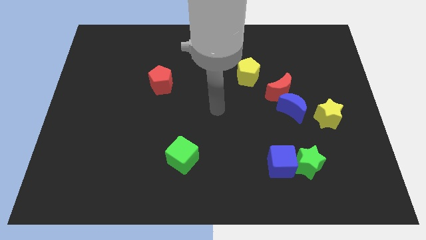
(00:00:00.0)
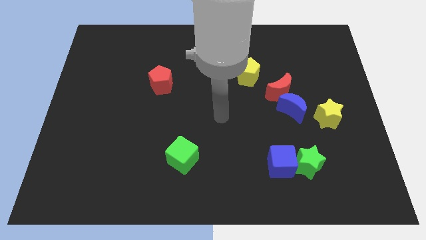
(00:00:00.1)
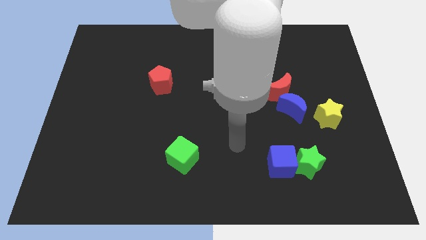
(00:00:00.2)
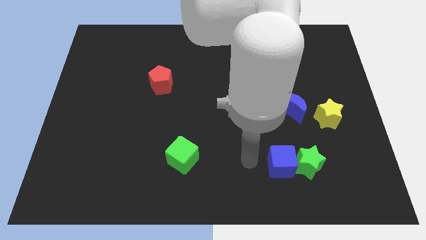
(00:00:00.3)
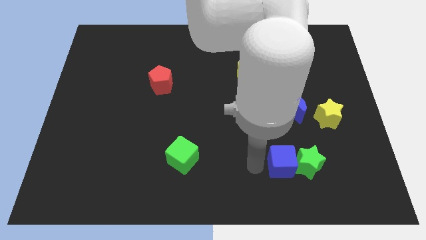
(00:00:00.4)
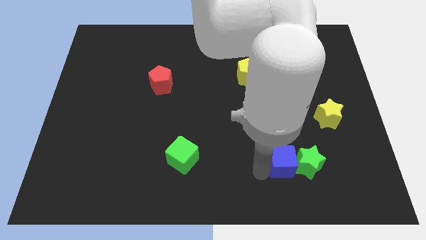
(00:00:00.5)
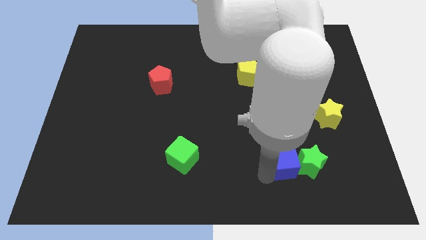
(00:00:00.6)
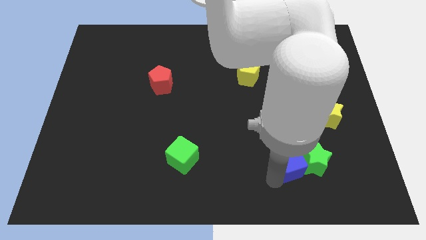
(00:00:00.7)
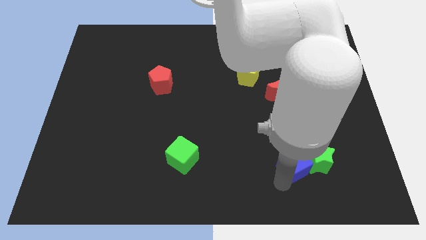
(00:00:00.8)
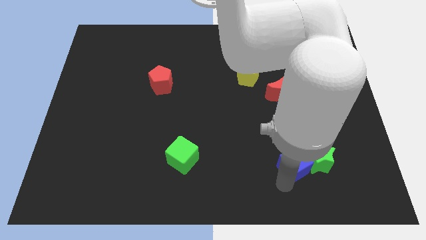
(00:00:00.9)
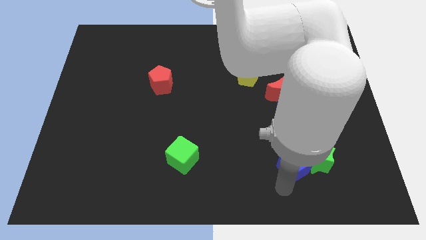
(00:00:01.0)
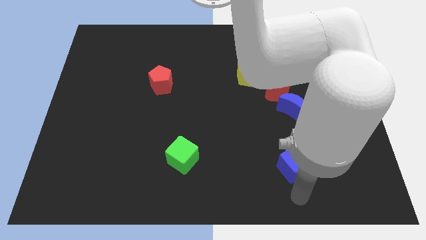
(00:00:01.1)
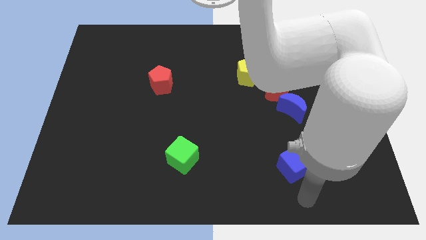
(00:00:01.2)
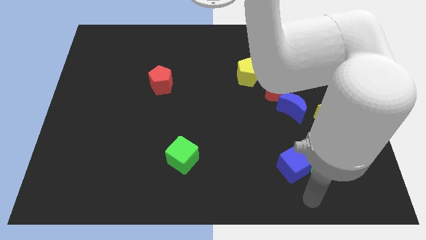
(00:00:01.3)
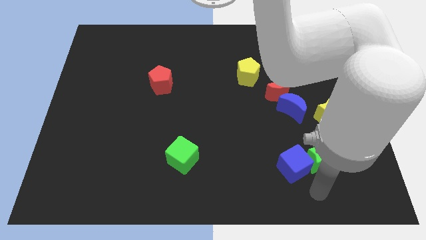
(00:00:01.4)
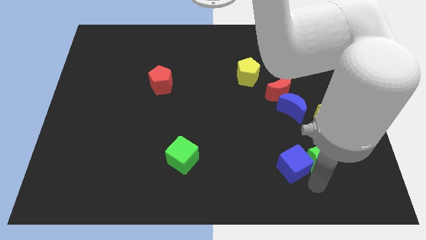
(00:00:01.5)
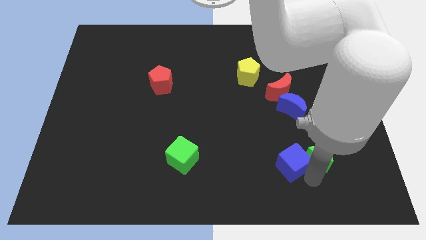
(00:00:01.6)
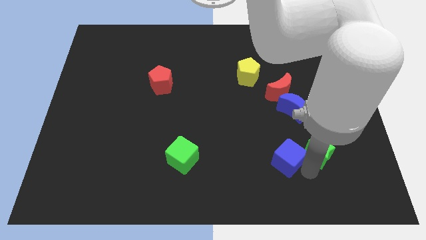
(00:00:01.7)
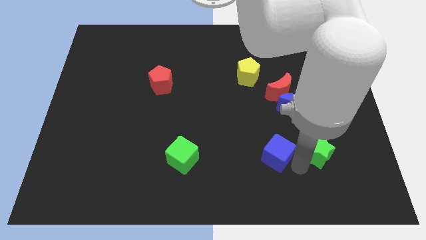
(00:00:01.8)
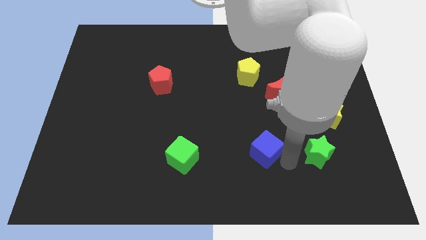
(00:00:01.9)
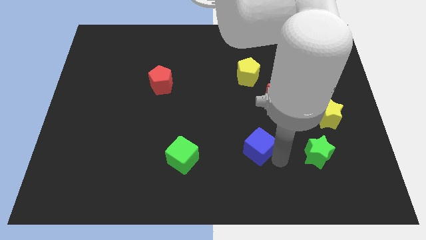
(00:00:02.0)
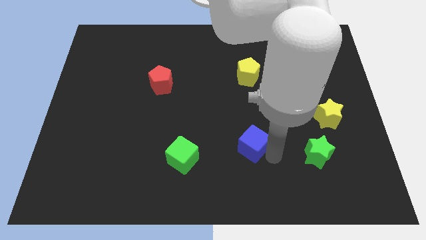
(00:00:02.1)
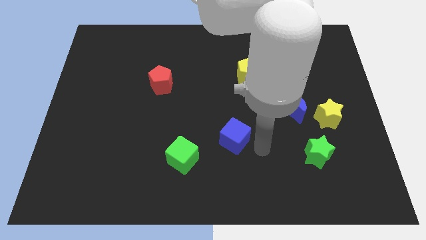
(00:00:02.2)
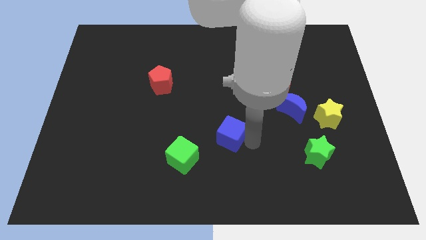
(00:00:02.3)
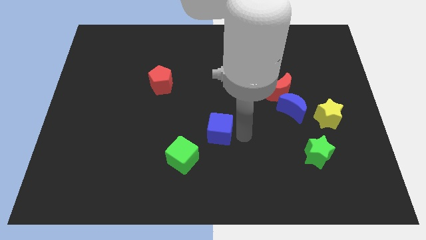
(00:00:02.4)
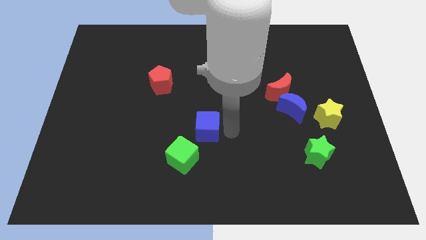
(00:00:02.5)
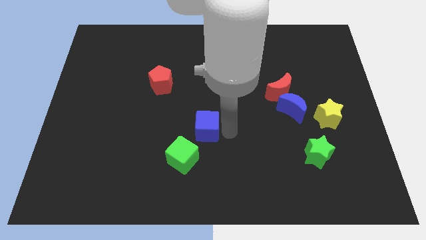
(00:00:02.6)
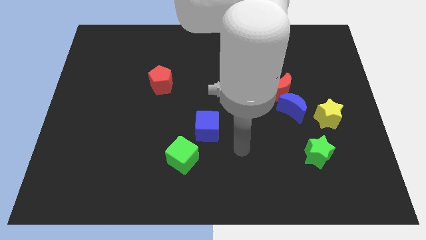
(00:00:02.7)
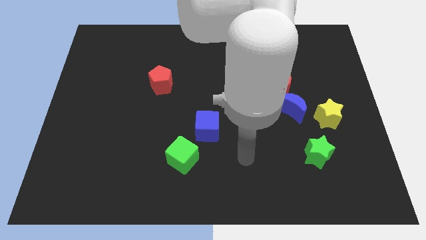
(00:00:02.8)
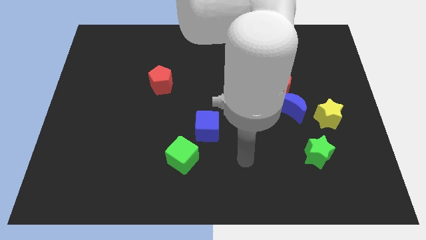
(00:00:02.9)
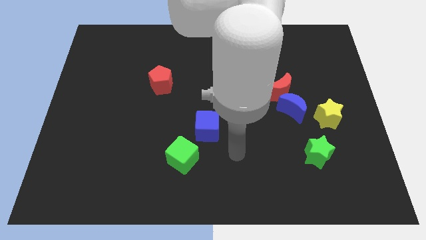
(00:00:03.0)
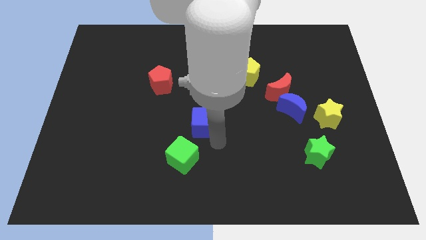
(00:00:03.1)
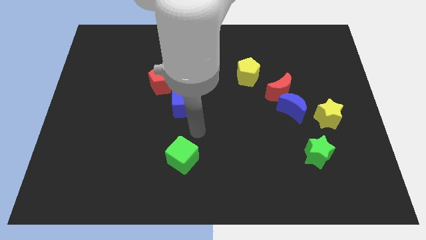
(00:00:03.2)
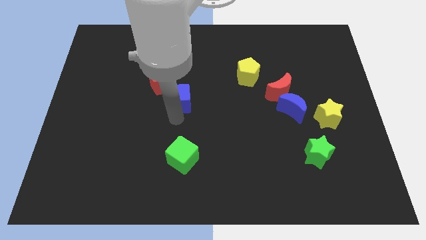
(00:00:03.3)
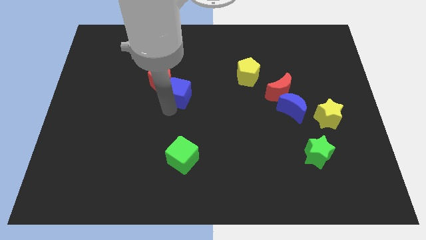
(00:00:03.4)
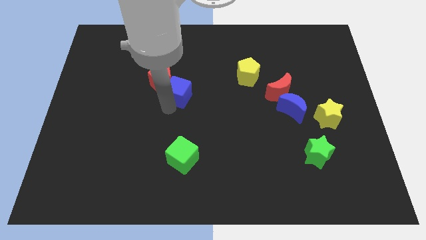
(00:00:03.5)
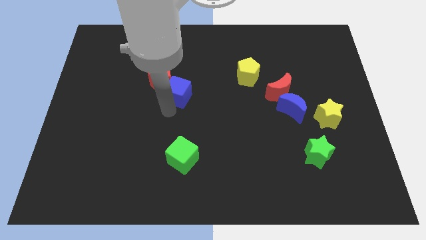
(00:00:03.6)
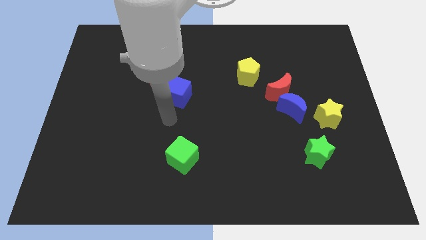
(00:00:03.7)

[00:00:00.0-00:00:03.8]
slide the blue cube next to the red pentagon

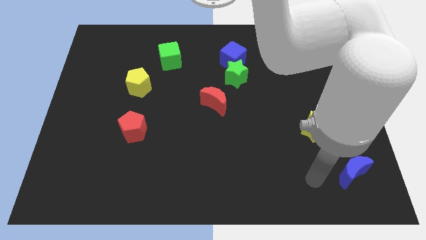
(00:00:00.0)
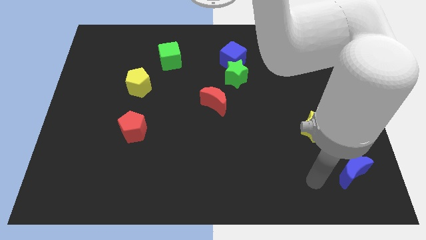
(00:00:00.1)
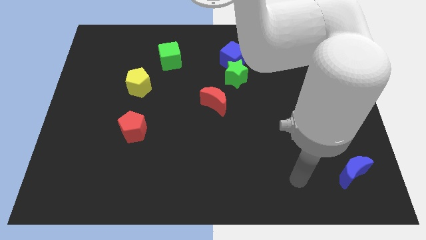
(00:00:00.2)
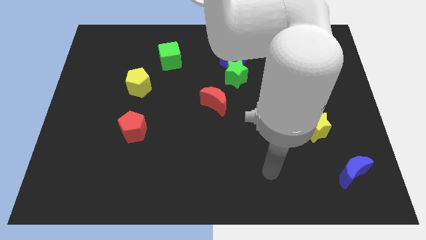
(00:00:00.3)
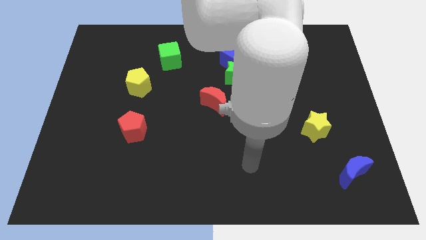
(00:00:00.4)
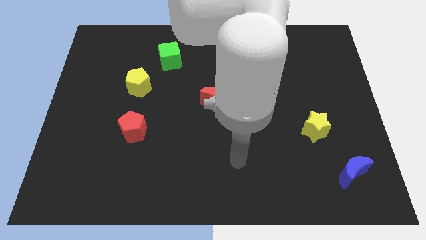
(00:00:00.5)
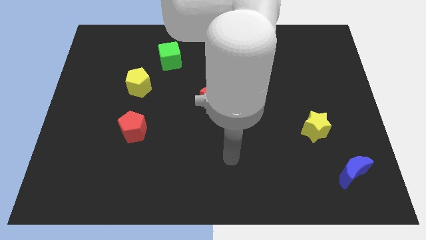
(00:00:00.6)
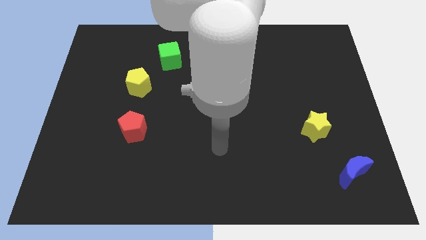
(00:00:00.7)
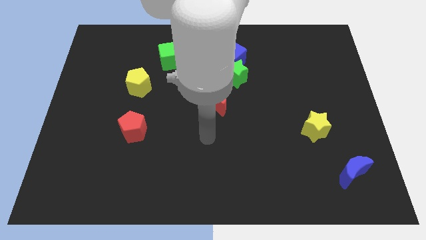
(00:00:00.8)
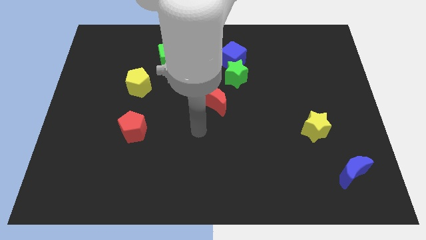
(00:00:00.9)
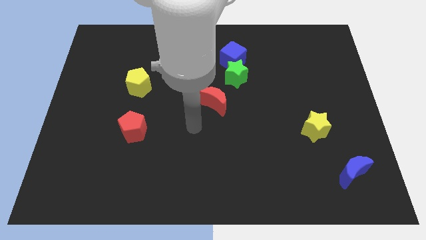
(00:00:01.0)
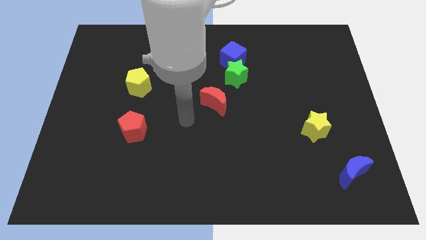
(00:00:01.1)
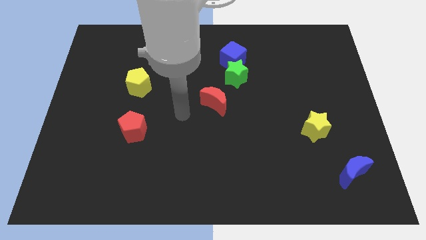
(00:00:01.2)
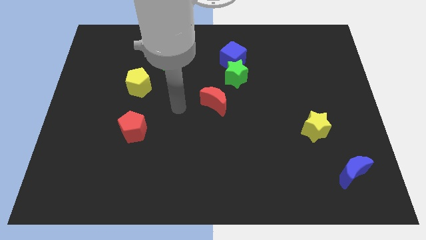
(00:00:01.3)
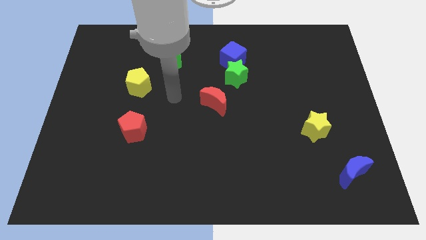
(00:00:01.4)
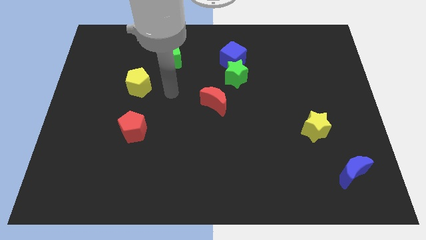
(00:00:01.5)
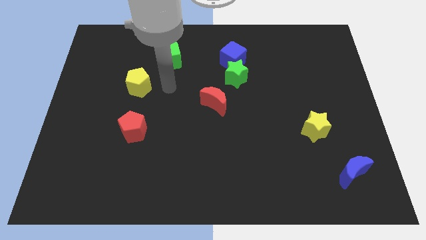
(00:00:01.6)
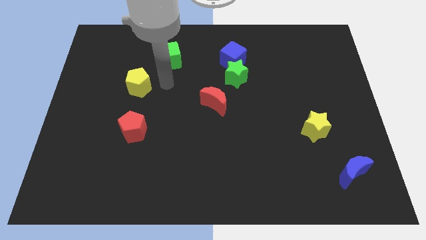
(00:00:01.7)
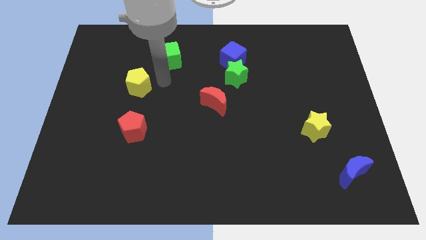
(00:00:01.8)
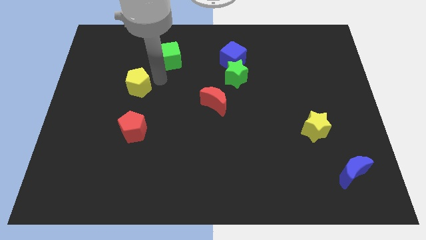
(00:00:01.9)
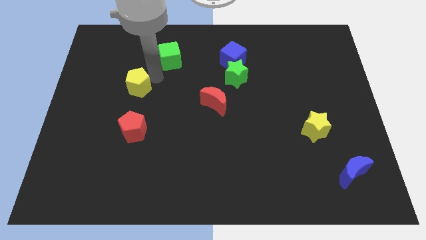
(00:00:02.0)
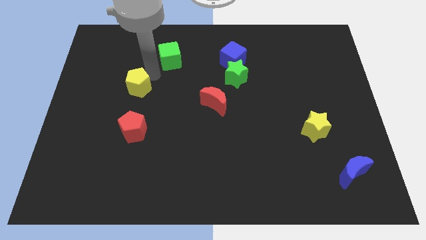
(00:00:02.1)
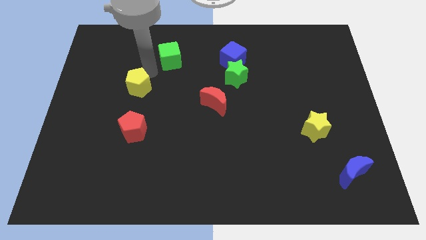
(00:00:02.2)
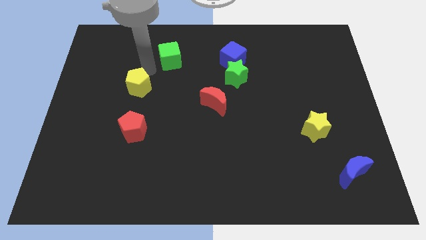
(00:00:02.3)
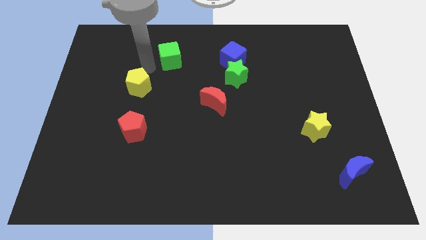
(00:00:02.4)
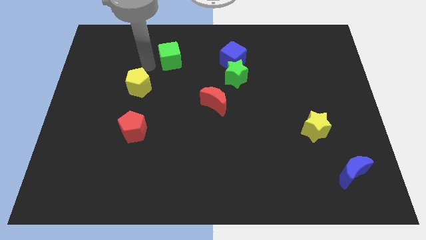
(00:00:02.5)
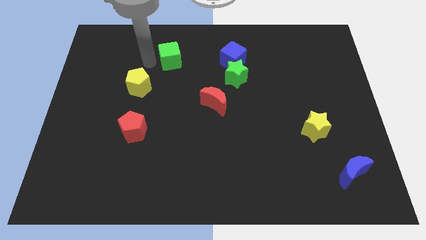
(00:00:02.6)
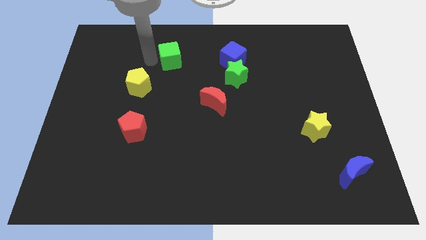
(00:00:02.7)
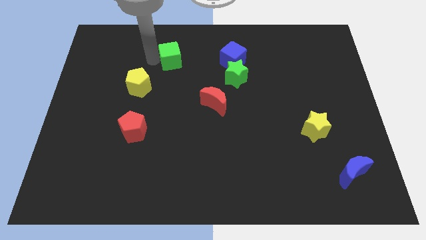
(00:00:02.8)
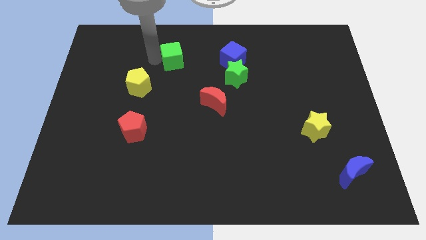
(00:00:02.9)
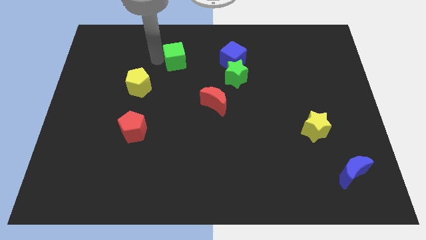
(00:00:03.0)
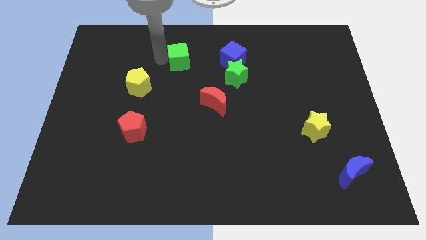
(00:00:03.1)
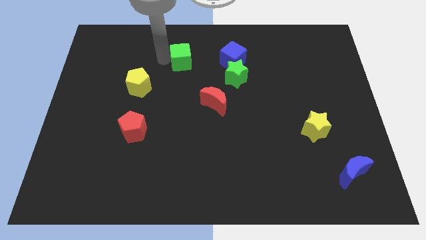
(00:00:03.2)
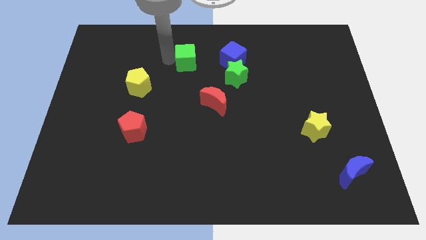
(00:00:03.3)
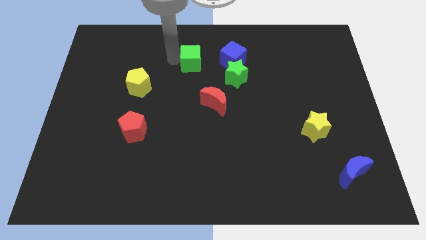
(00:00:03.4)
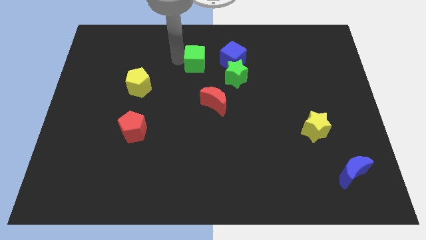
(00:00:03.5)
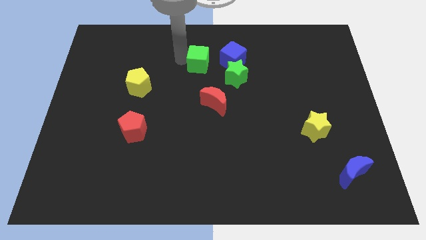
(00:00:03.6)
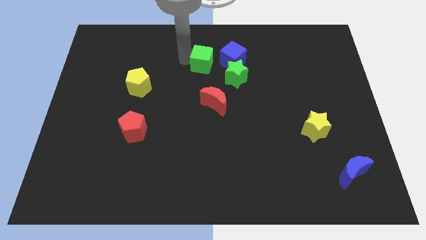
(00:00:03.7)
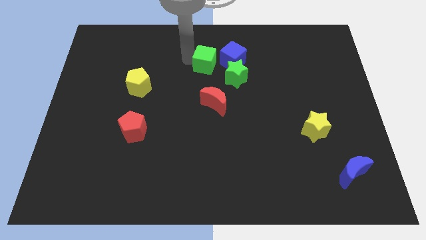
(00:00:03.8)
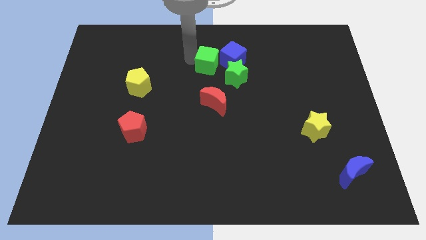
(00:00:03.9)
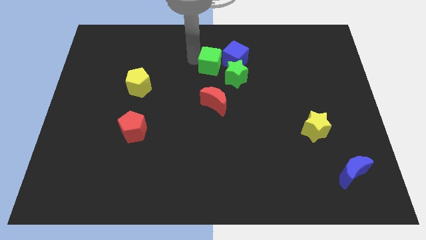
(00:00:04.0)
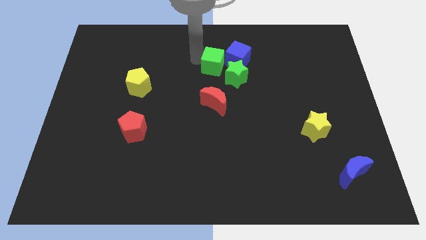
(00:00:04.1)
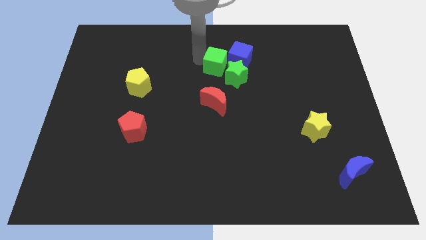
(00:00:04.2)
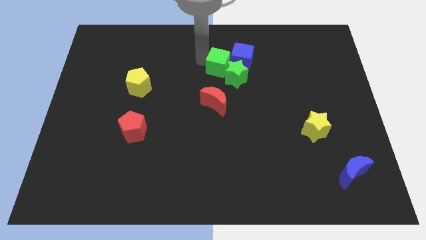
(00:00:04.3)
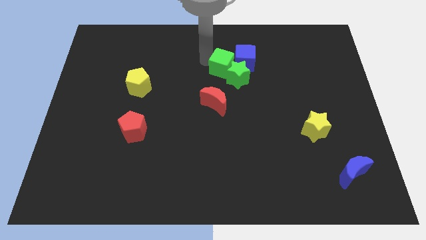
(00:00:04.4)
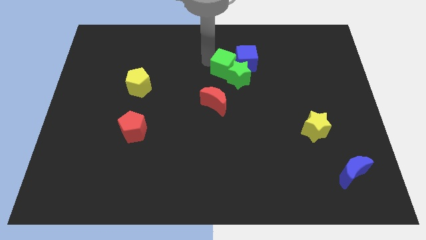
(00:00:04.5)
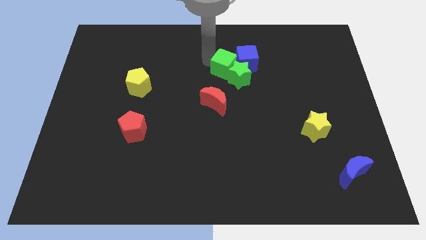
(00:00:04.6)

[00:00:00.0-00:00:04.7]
slide the green cube towards the blue cube

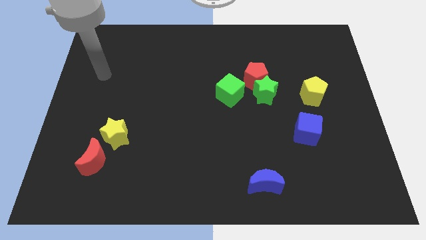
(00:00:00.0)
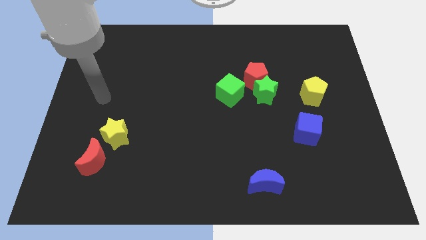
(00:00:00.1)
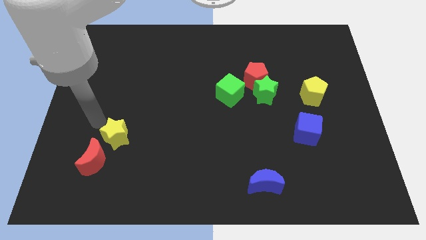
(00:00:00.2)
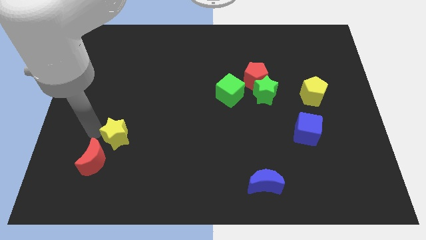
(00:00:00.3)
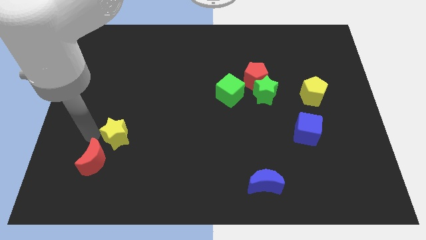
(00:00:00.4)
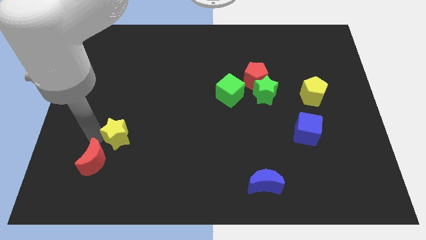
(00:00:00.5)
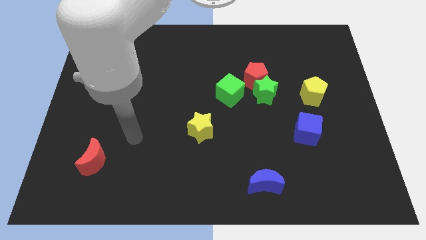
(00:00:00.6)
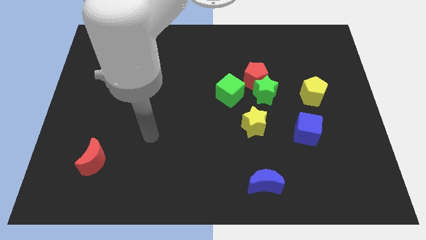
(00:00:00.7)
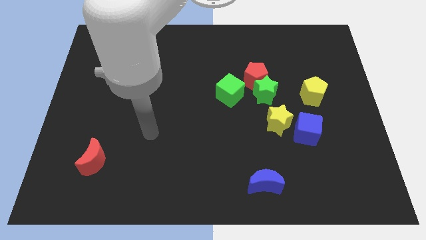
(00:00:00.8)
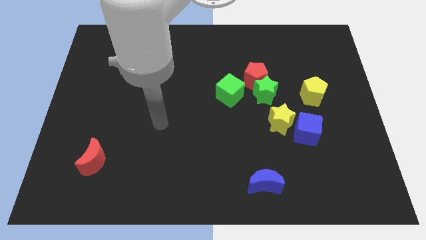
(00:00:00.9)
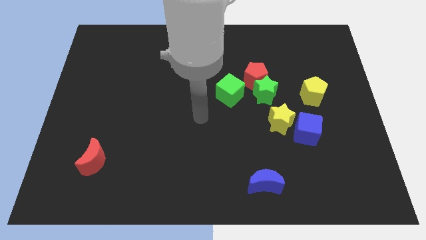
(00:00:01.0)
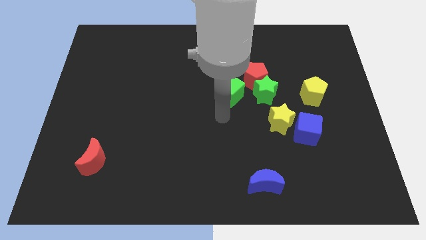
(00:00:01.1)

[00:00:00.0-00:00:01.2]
push the yellow star to the blue cube
